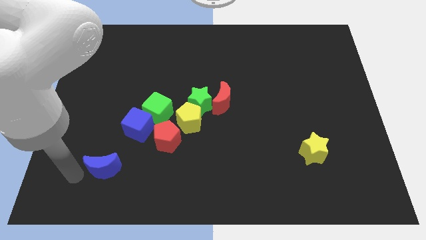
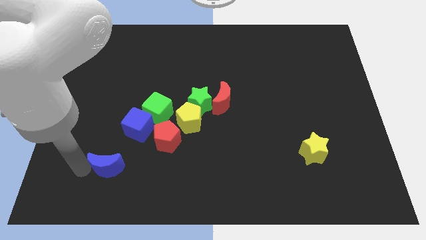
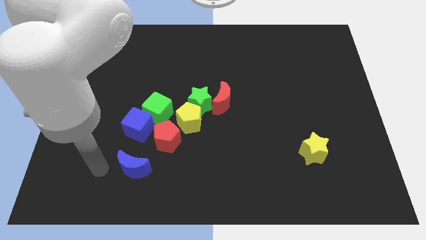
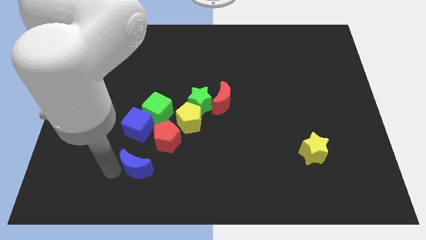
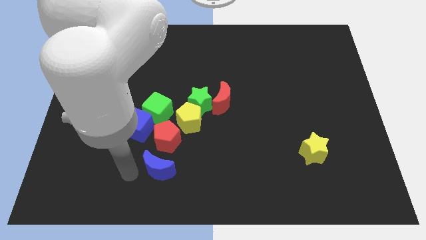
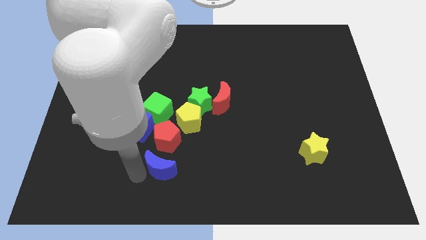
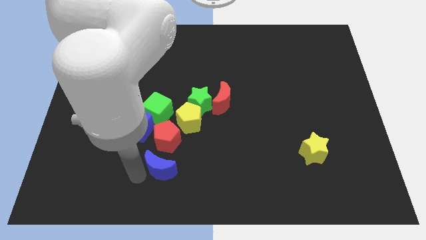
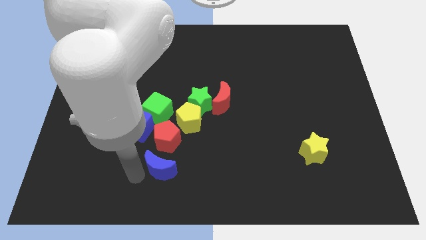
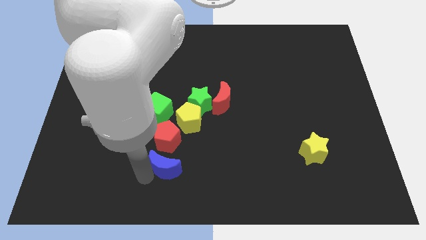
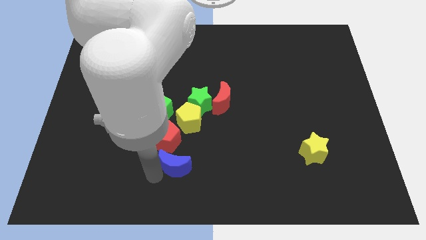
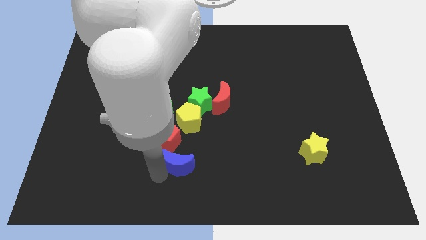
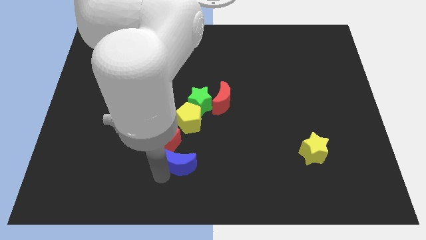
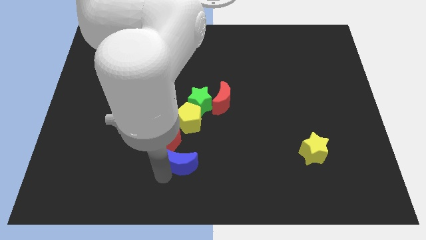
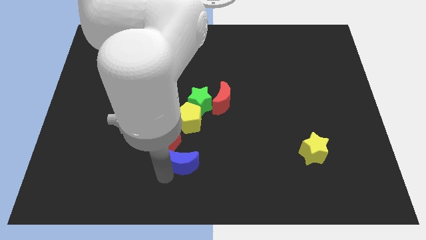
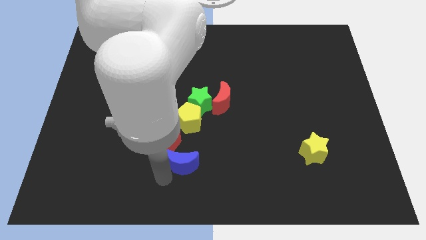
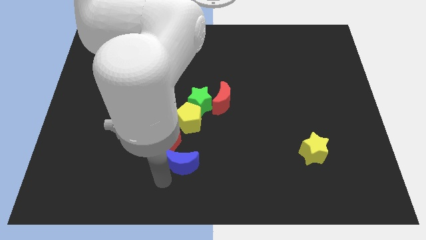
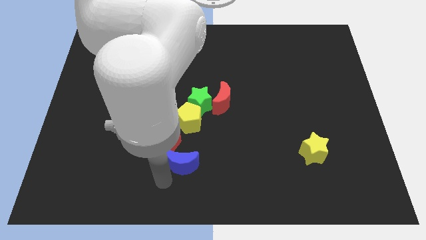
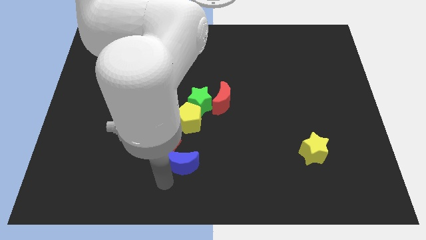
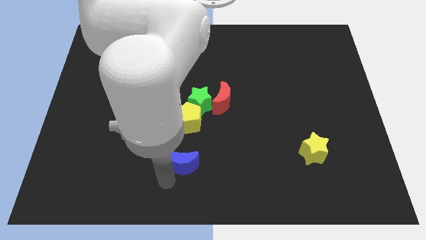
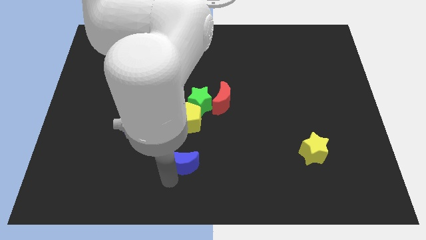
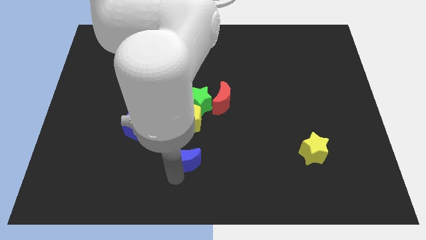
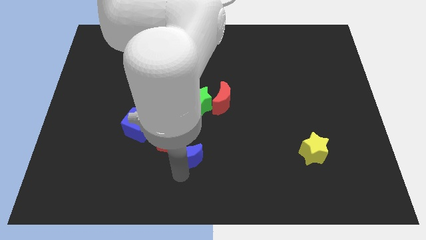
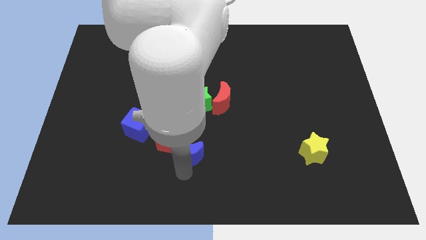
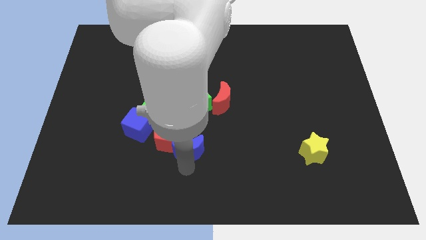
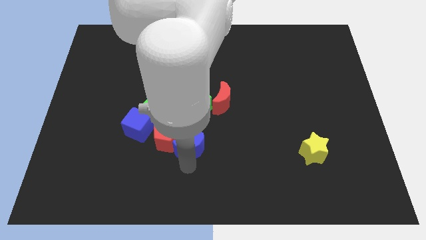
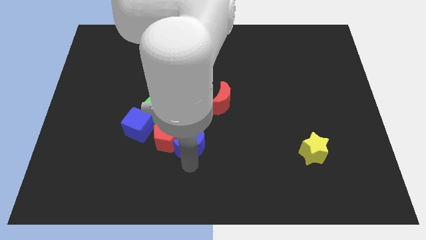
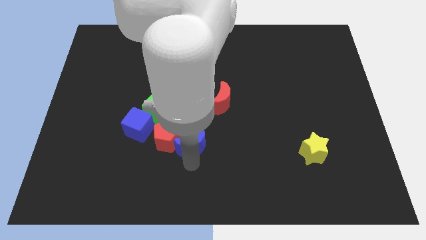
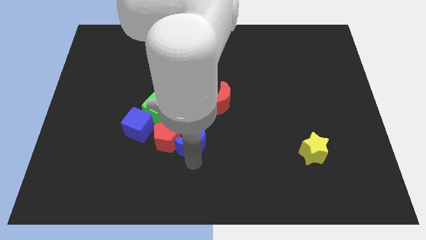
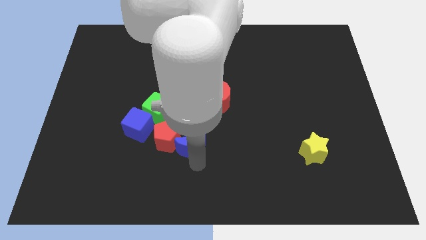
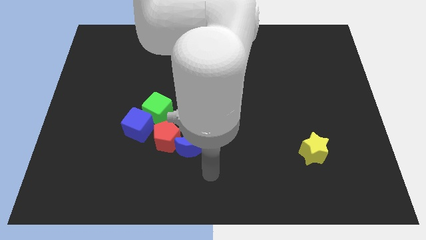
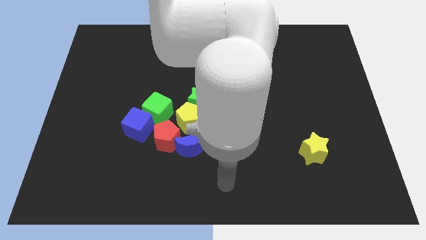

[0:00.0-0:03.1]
move the blue moon to the right side of the red pentagon

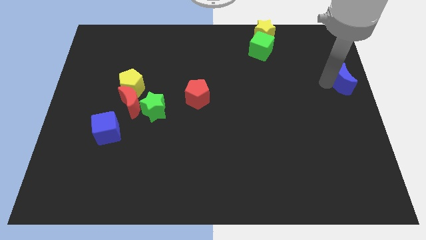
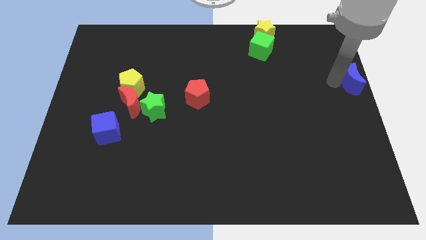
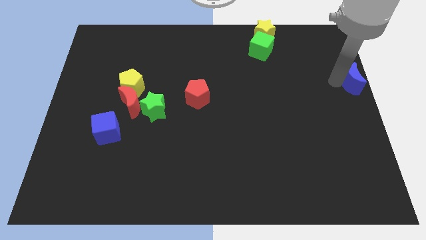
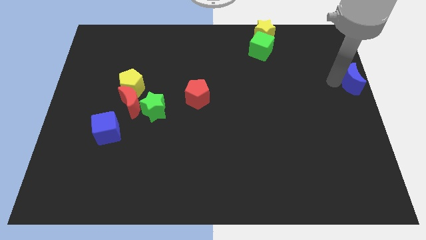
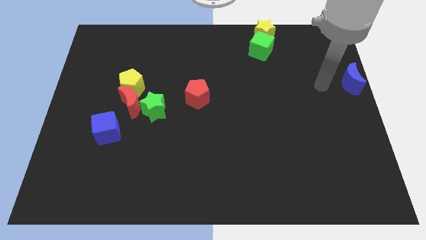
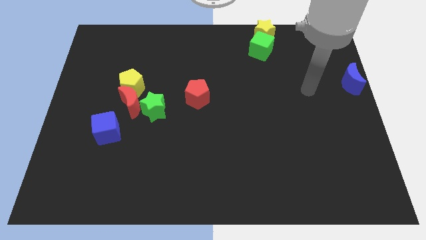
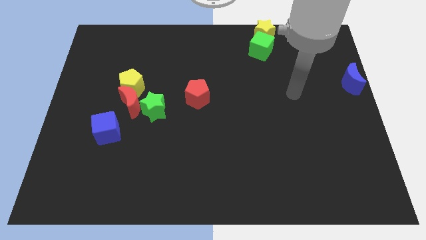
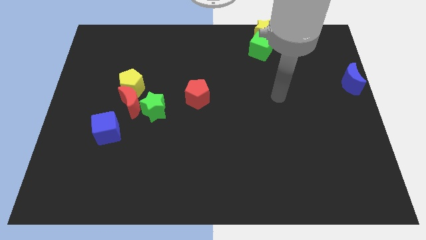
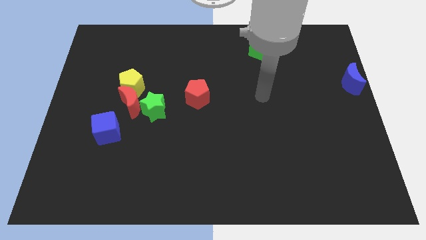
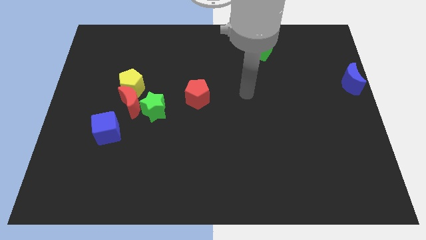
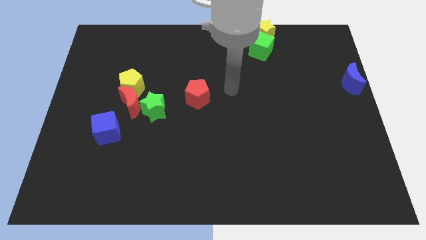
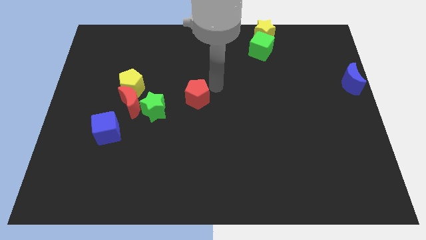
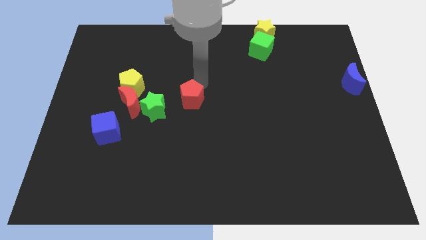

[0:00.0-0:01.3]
move your arm away from blue moon

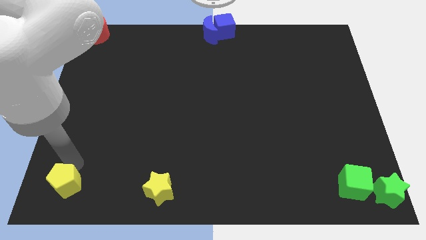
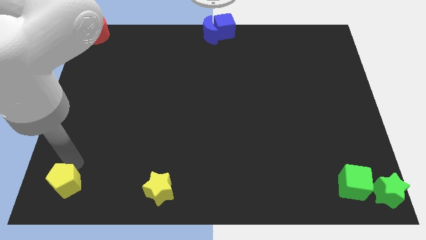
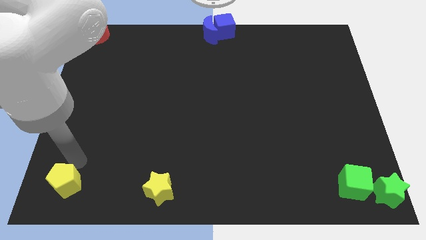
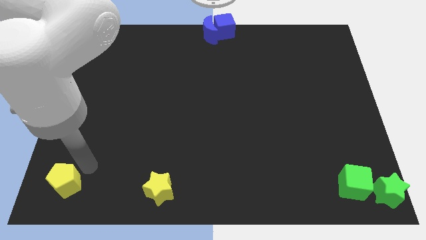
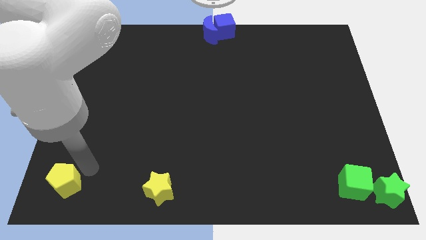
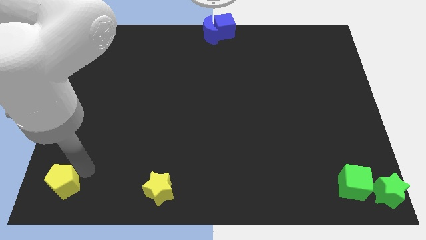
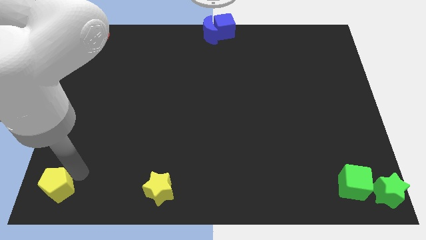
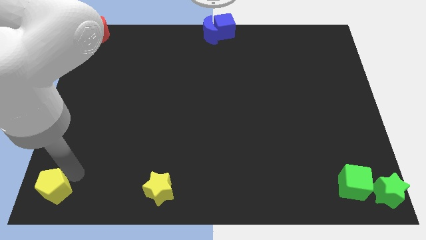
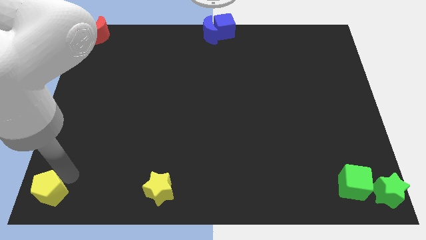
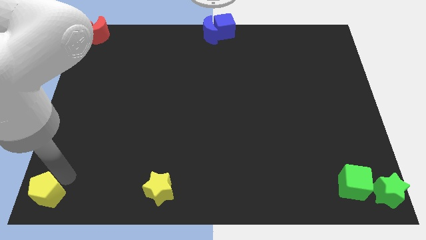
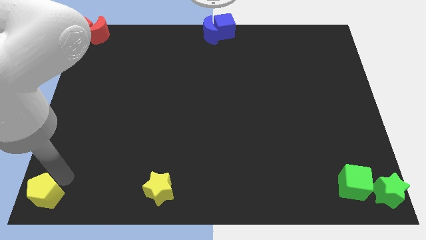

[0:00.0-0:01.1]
move the yellow pentagon bottom left to the board

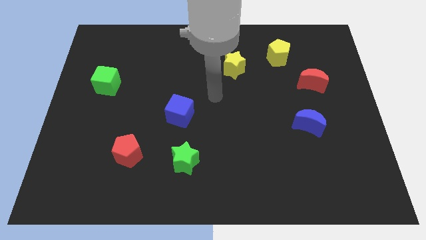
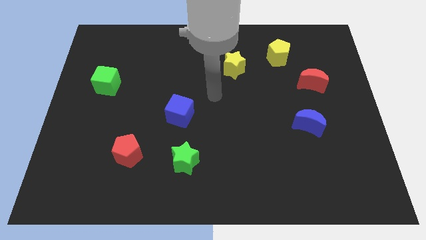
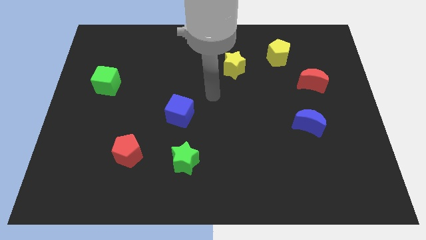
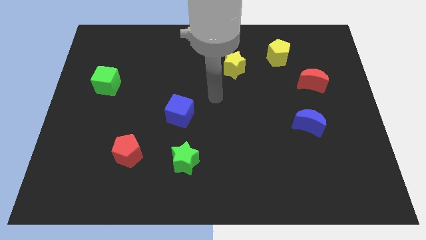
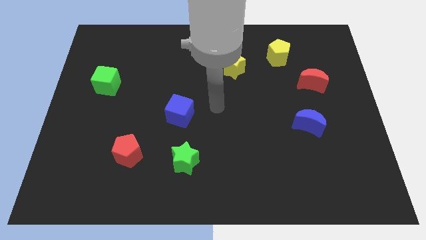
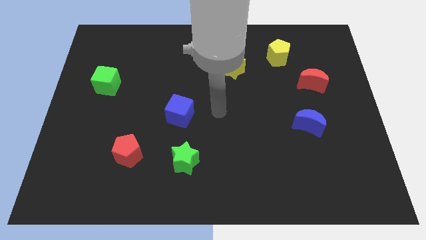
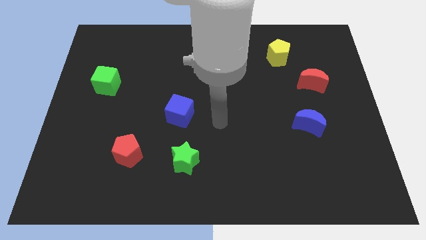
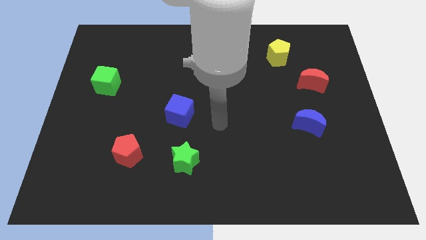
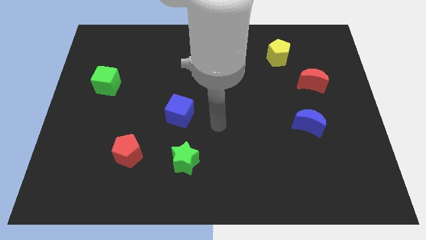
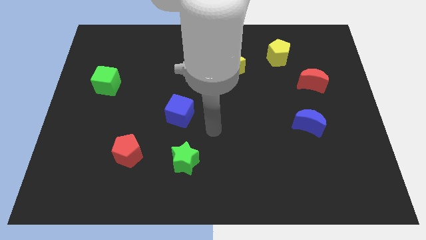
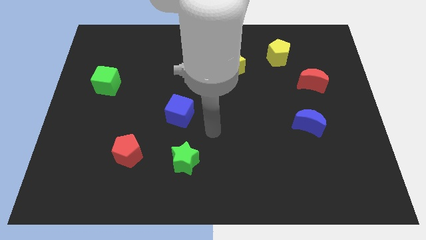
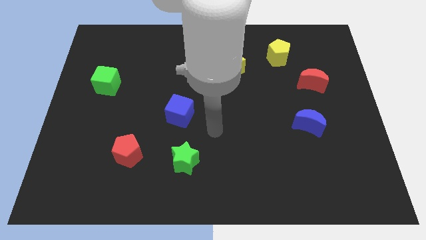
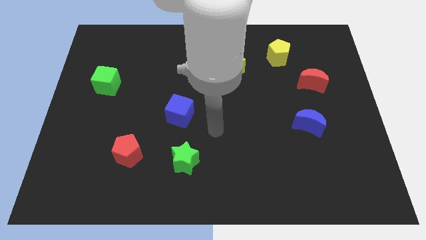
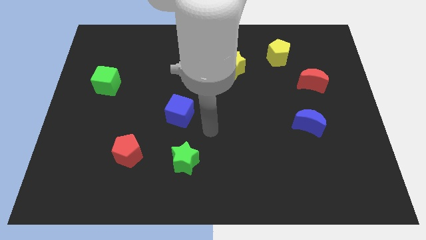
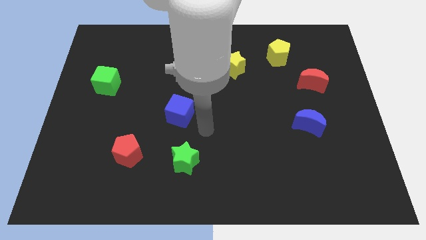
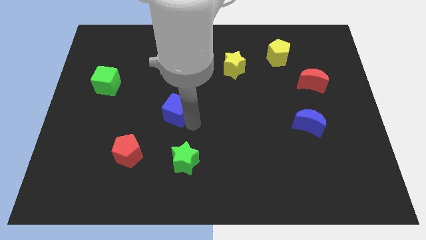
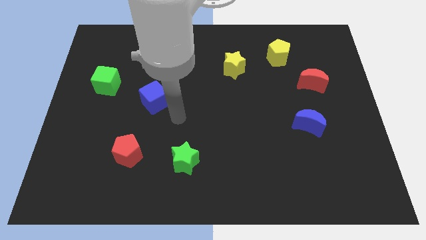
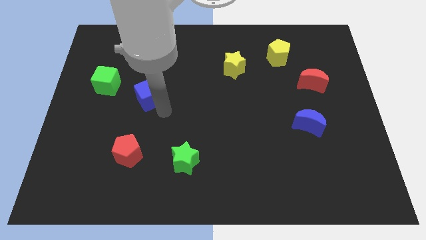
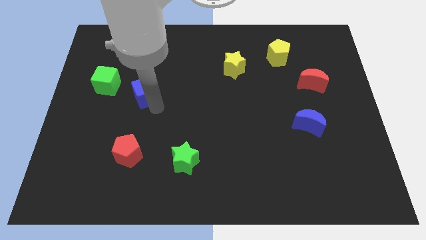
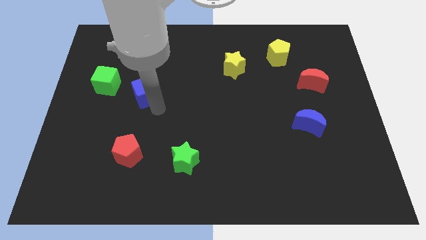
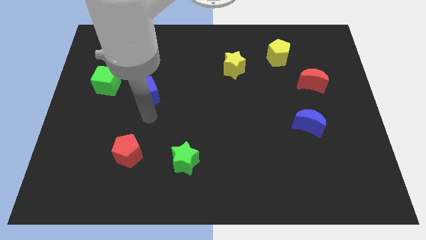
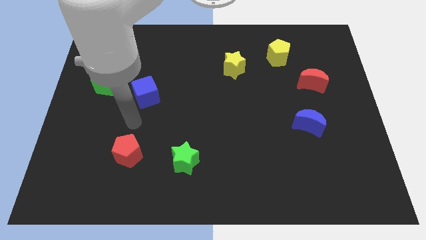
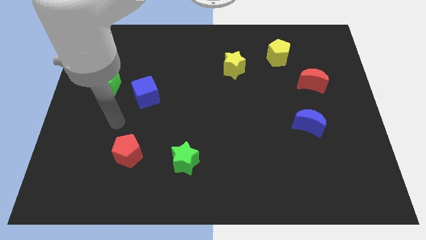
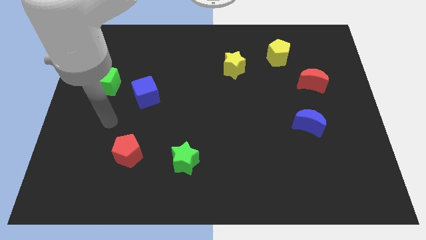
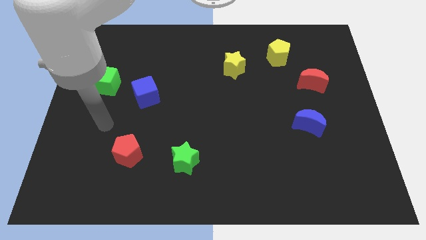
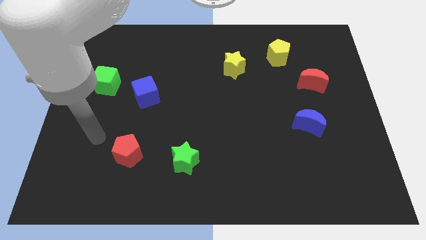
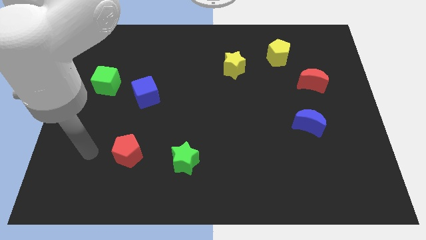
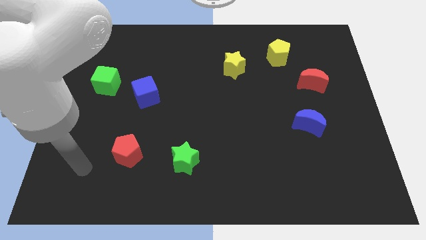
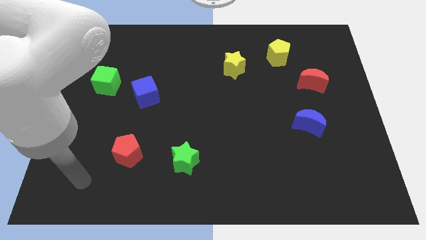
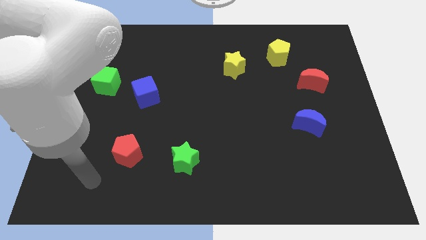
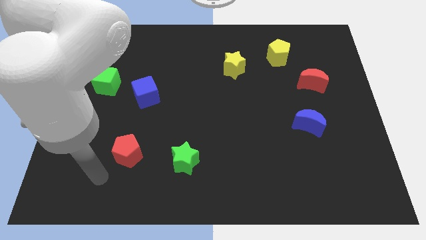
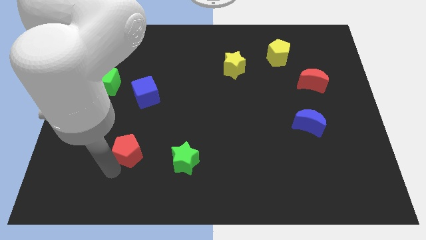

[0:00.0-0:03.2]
move the blue towards the green cube

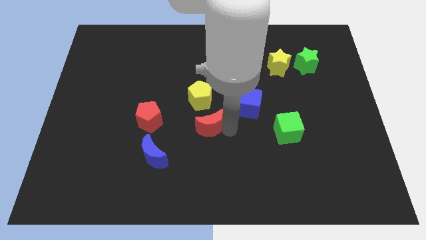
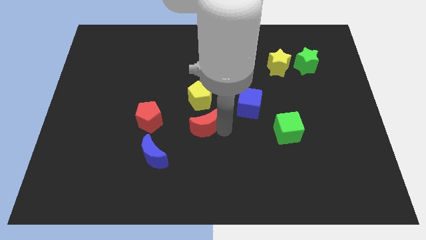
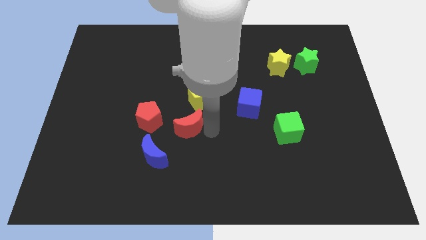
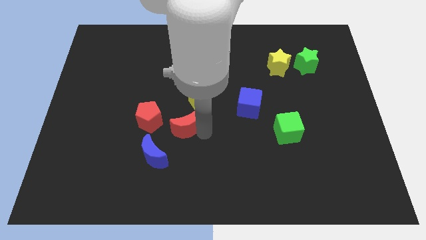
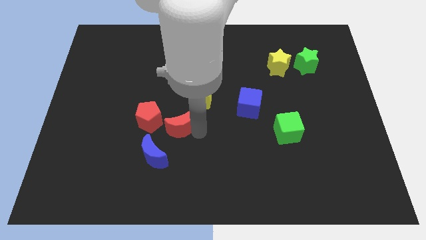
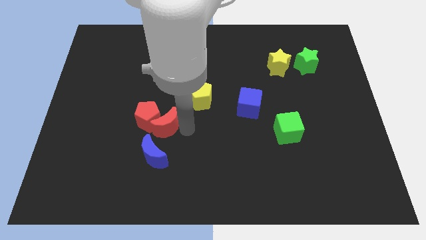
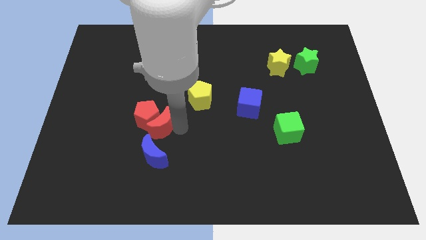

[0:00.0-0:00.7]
move the red crescent to the right of the red pentagon
